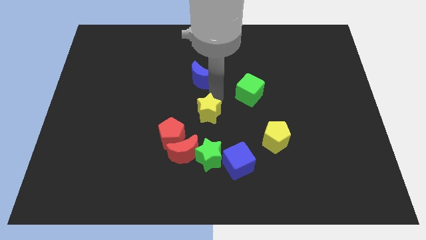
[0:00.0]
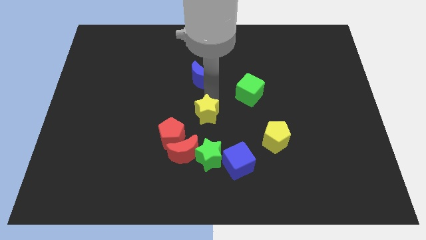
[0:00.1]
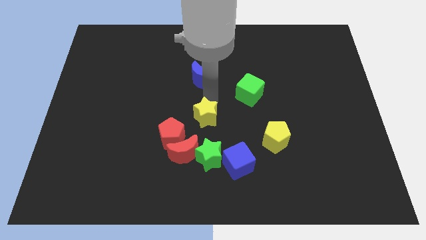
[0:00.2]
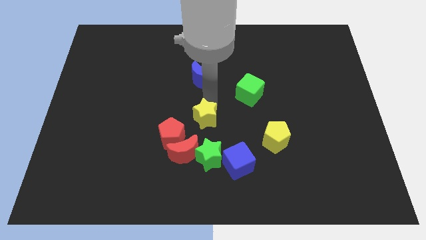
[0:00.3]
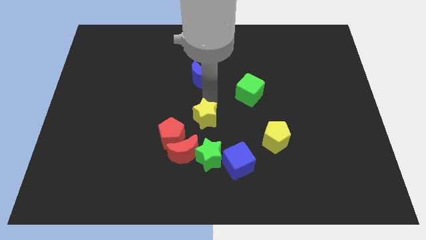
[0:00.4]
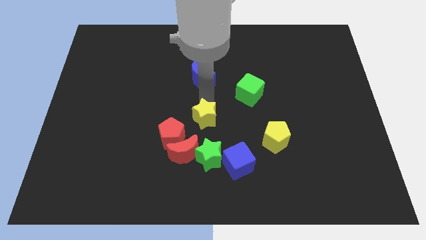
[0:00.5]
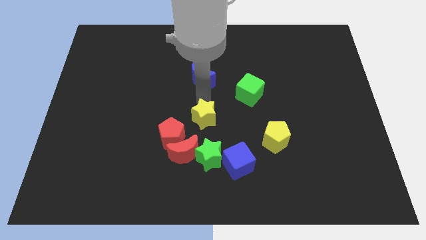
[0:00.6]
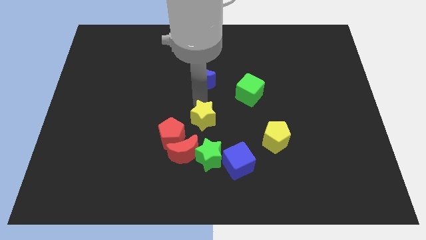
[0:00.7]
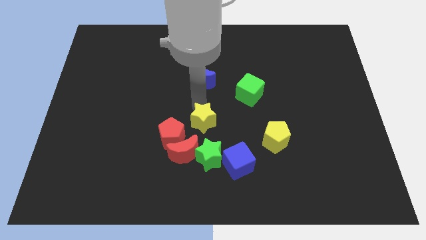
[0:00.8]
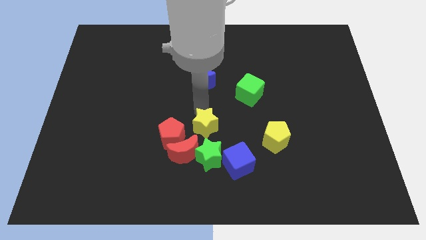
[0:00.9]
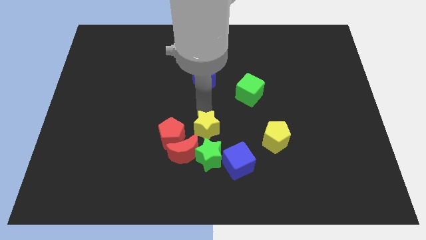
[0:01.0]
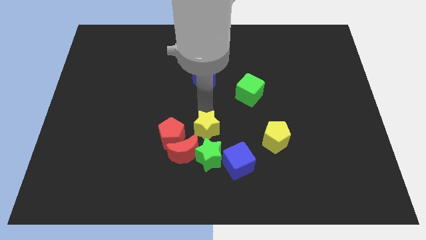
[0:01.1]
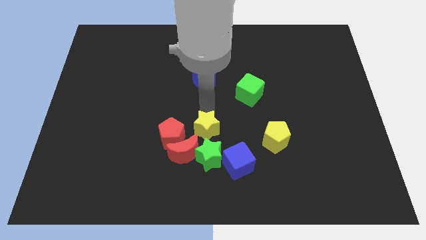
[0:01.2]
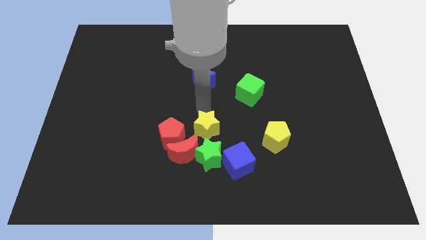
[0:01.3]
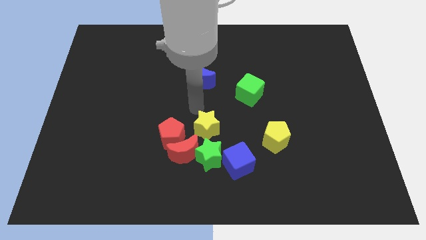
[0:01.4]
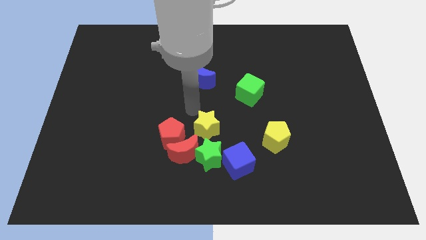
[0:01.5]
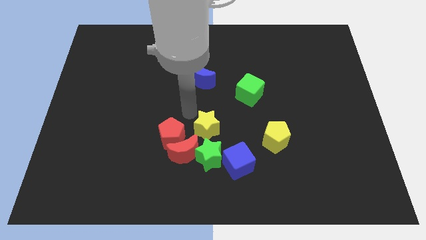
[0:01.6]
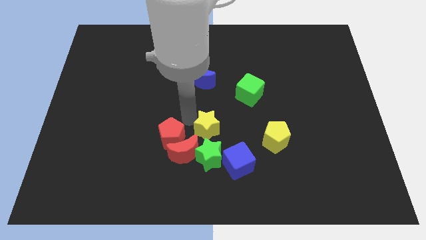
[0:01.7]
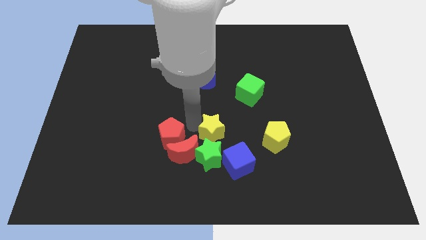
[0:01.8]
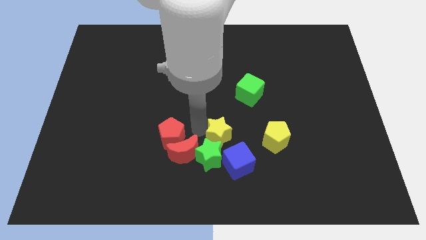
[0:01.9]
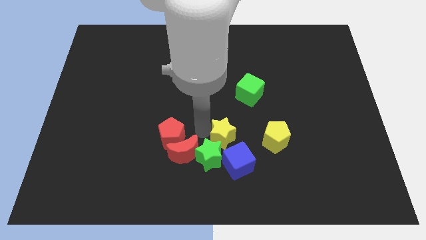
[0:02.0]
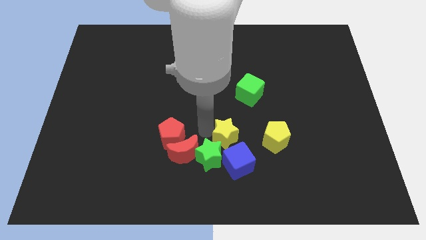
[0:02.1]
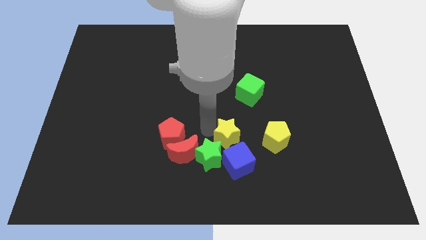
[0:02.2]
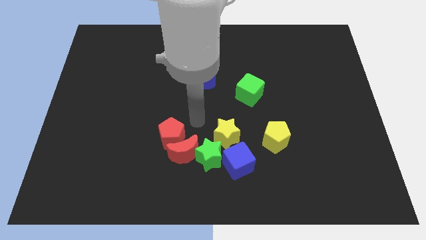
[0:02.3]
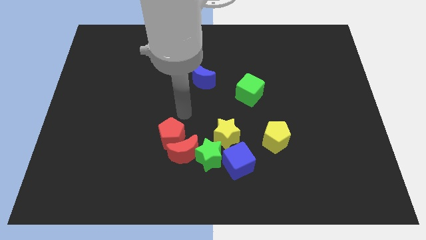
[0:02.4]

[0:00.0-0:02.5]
push the yellow star above the blue cube

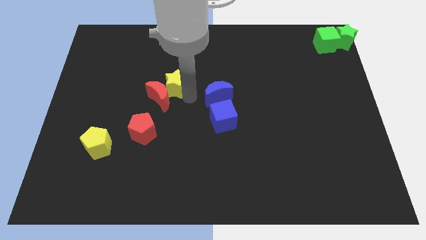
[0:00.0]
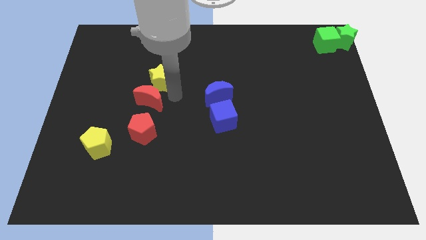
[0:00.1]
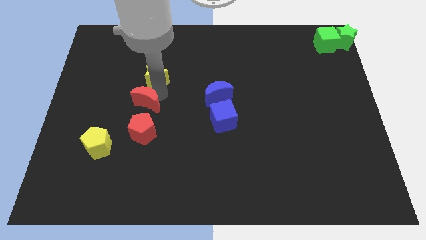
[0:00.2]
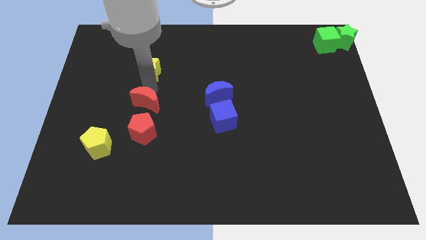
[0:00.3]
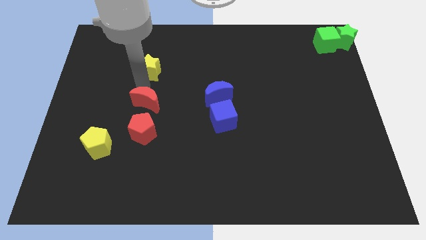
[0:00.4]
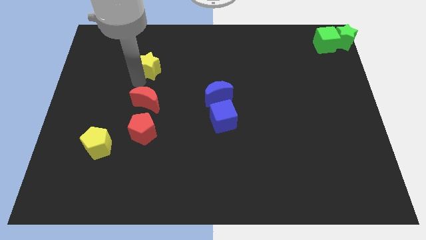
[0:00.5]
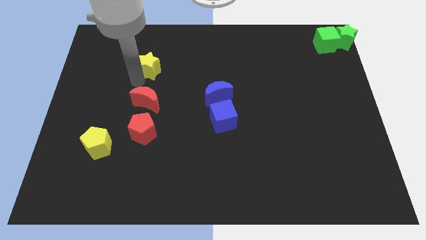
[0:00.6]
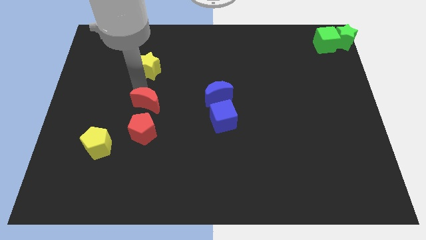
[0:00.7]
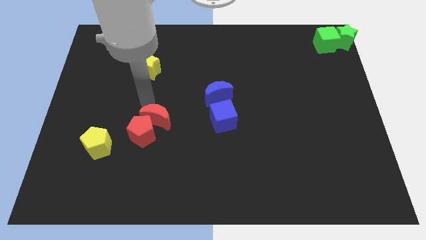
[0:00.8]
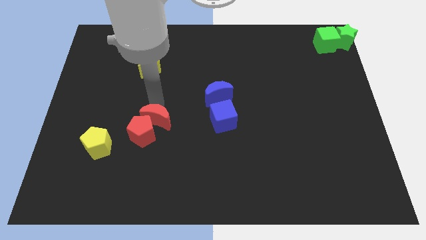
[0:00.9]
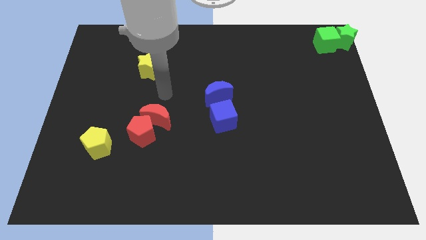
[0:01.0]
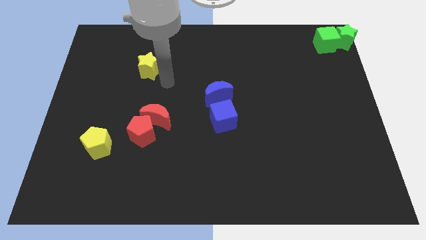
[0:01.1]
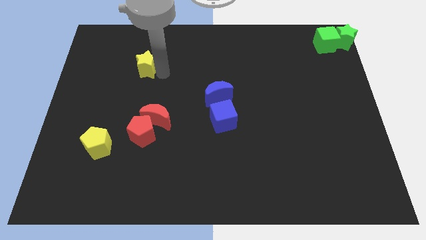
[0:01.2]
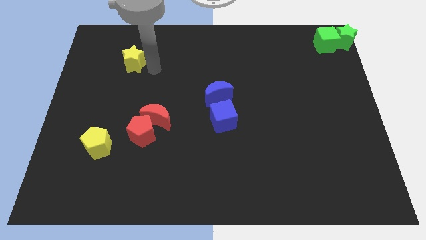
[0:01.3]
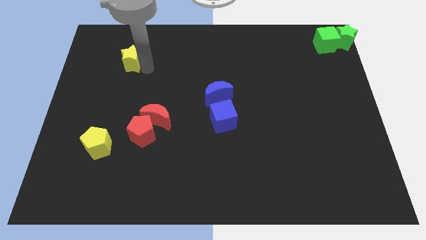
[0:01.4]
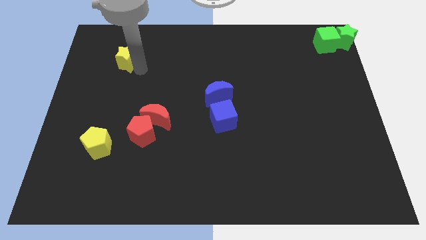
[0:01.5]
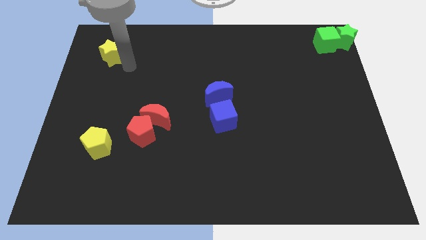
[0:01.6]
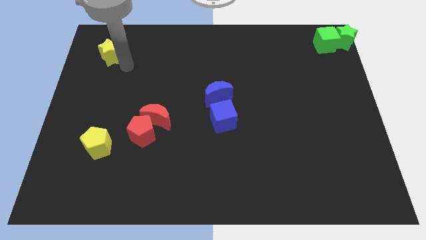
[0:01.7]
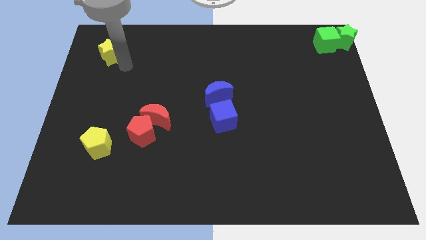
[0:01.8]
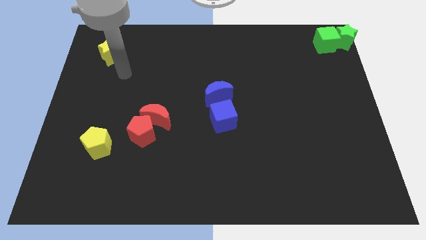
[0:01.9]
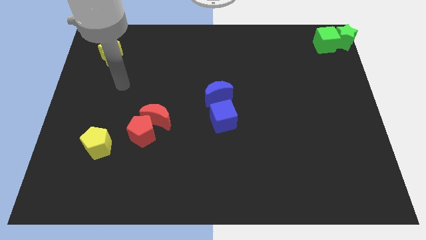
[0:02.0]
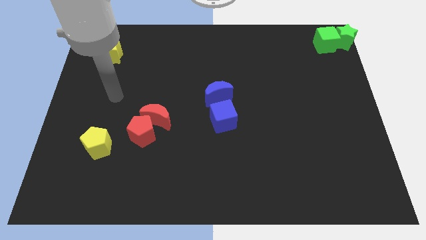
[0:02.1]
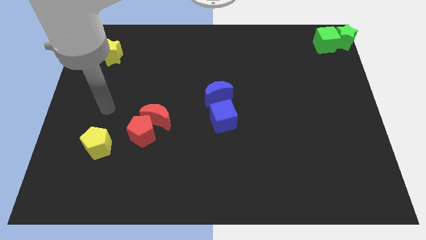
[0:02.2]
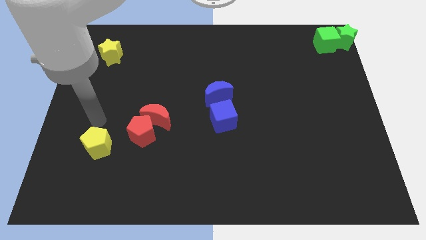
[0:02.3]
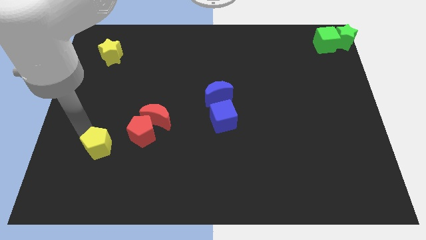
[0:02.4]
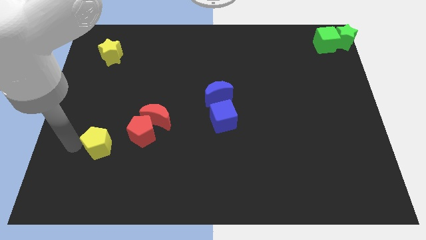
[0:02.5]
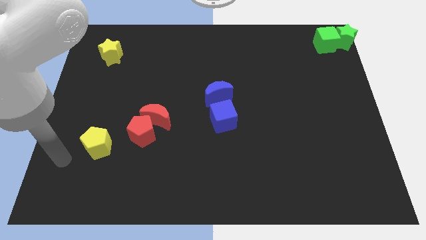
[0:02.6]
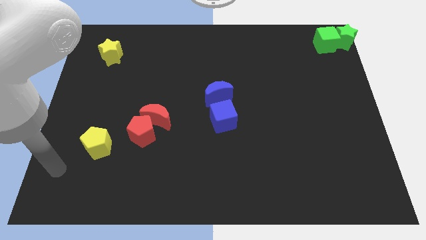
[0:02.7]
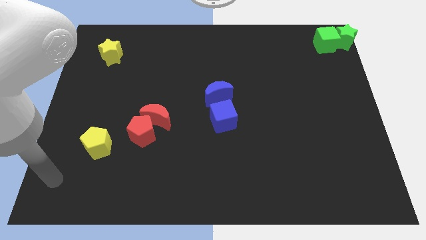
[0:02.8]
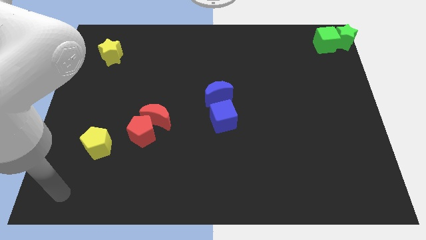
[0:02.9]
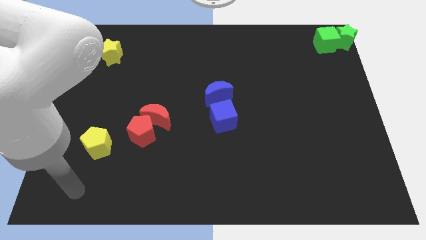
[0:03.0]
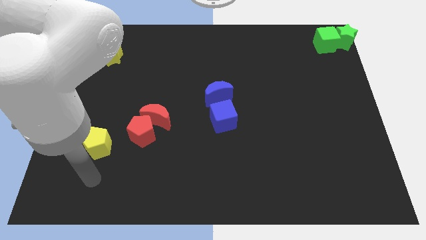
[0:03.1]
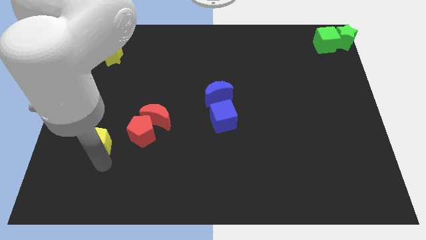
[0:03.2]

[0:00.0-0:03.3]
move the yellow star towards top left side of the board

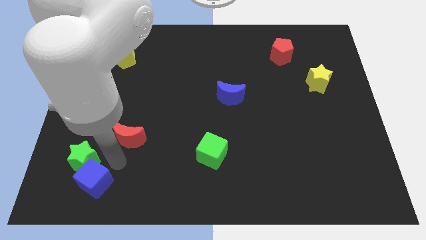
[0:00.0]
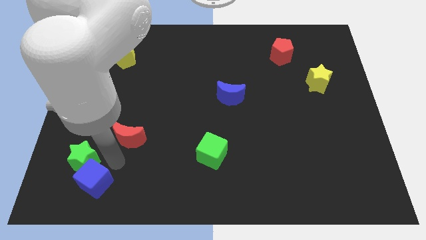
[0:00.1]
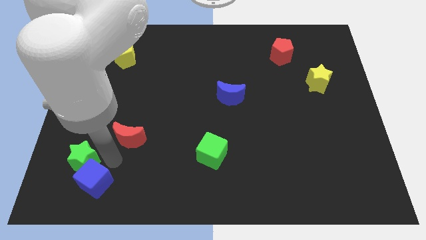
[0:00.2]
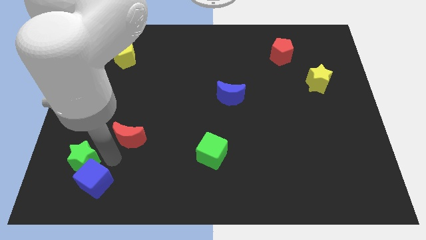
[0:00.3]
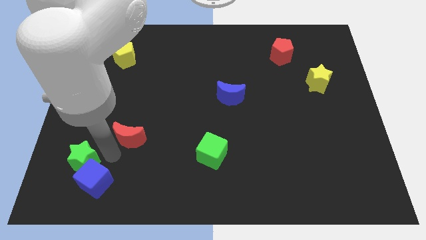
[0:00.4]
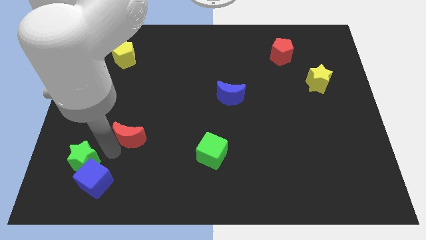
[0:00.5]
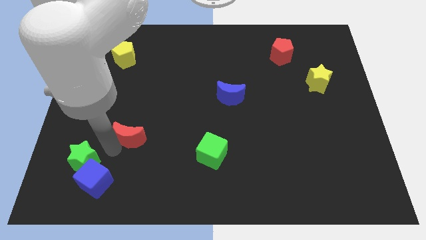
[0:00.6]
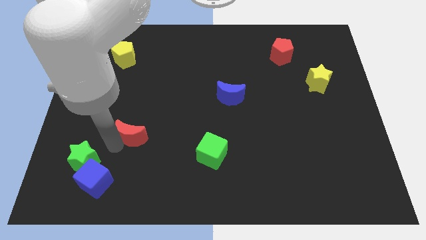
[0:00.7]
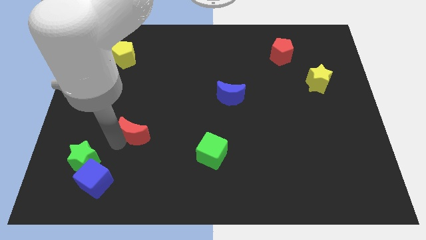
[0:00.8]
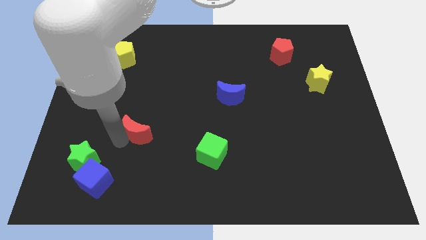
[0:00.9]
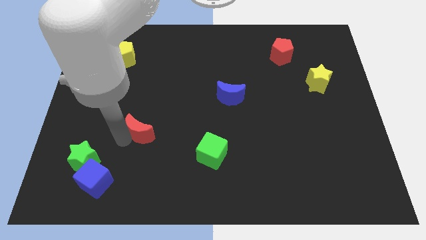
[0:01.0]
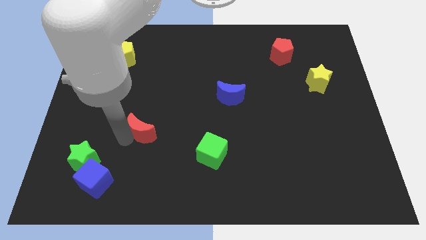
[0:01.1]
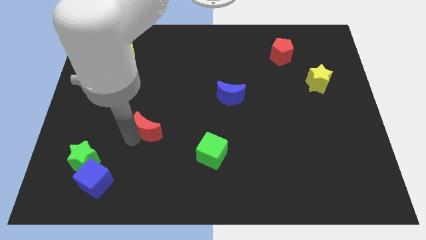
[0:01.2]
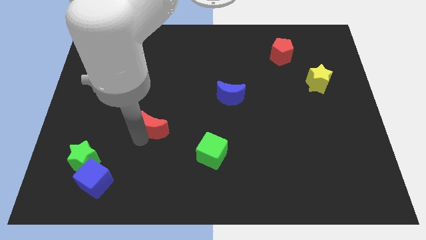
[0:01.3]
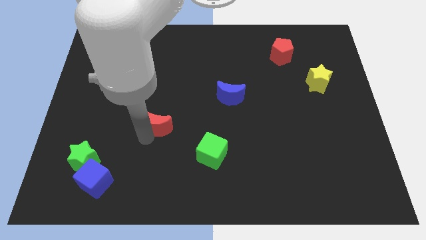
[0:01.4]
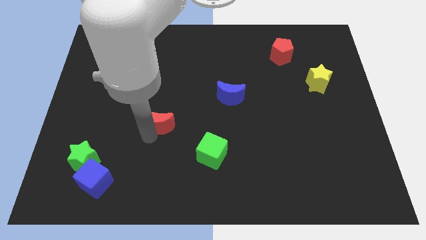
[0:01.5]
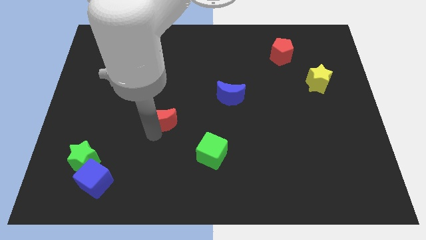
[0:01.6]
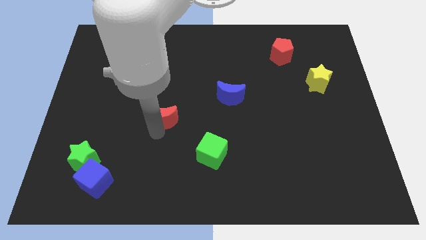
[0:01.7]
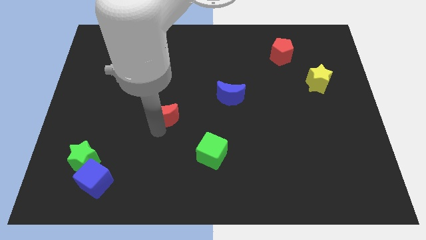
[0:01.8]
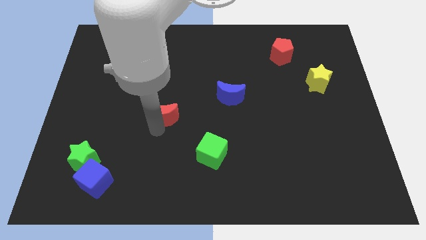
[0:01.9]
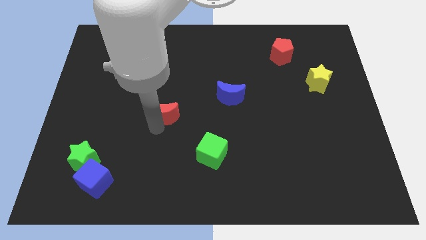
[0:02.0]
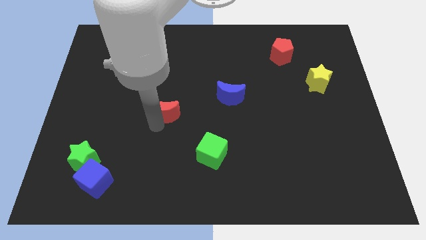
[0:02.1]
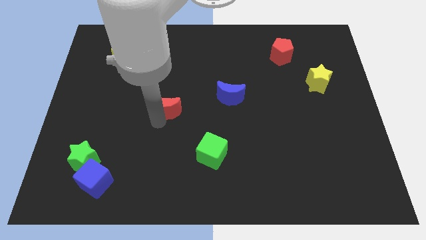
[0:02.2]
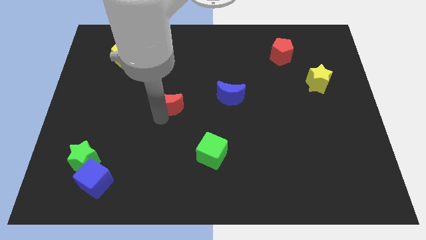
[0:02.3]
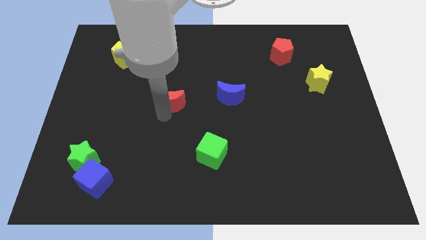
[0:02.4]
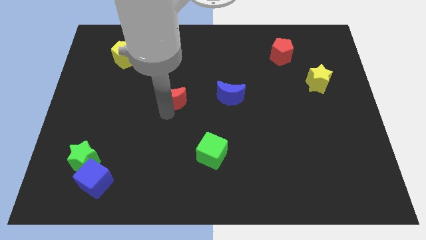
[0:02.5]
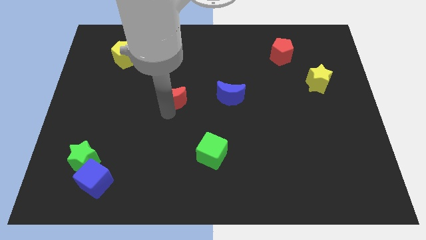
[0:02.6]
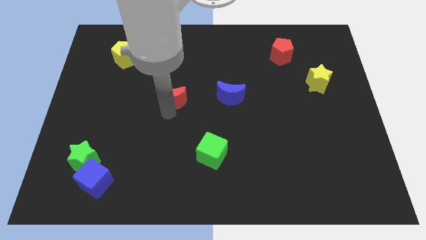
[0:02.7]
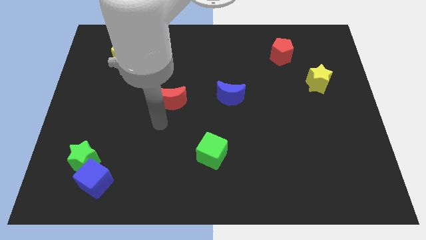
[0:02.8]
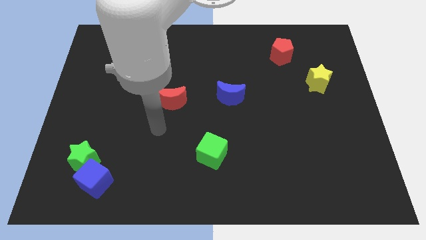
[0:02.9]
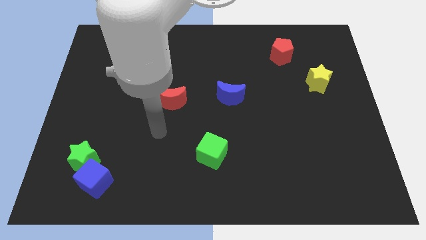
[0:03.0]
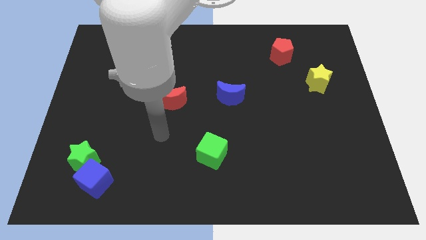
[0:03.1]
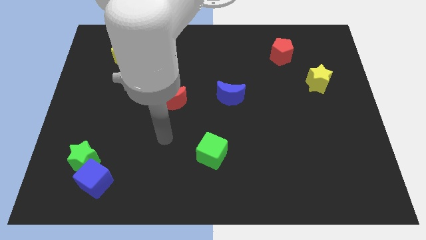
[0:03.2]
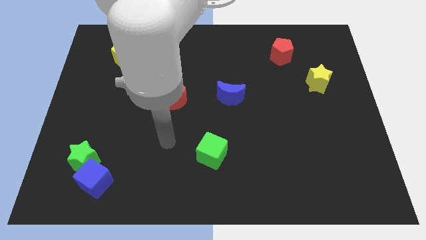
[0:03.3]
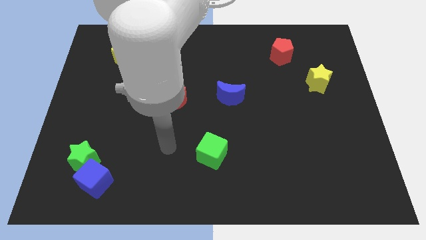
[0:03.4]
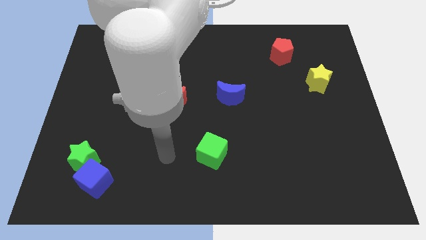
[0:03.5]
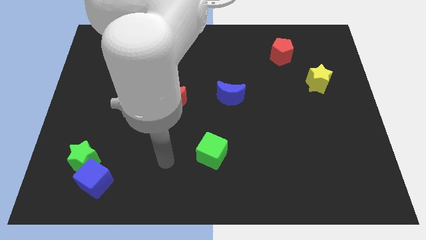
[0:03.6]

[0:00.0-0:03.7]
move the red crescent to the left of the blue crescent
